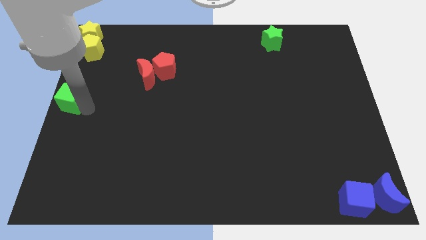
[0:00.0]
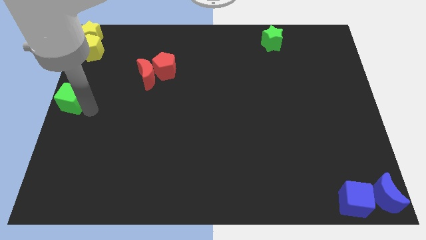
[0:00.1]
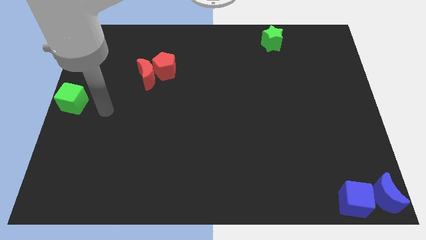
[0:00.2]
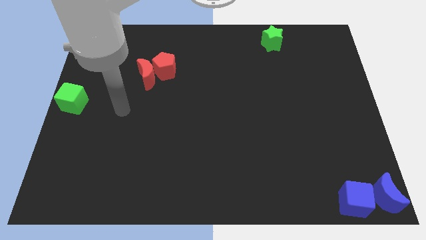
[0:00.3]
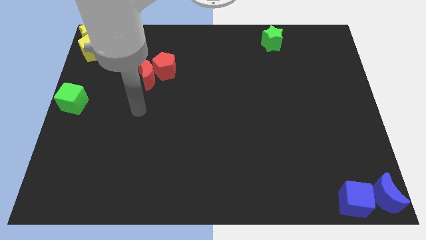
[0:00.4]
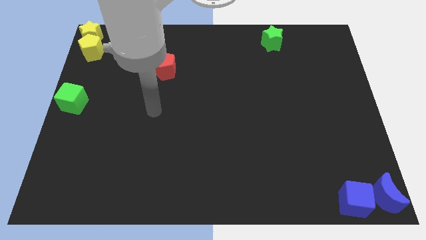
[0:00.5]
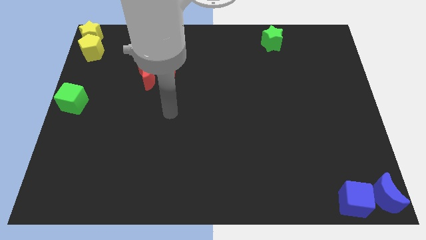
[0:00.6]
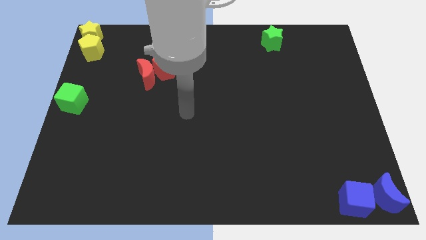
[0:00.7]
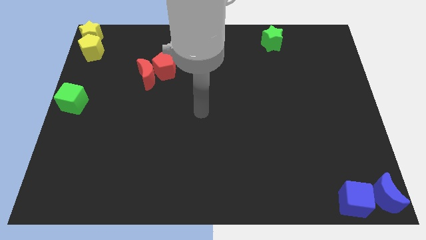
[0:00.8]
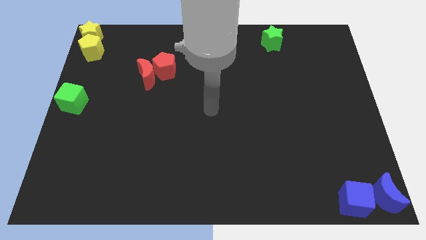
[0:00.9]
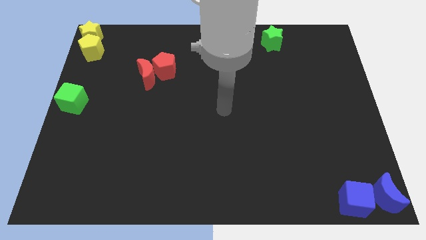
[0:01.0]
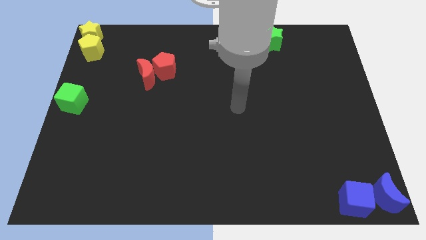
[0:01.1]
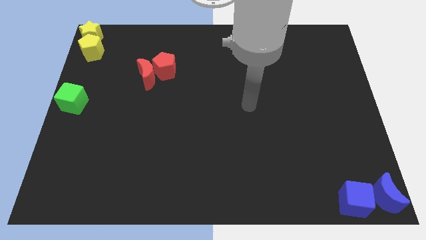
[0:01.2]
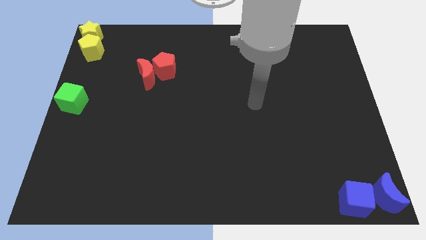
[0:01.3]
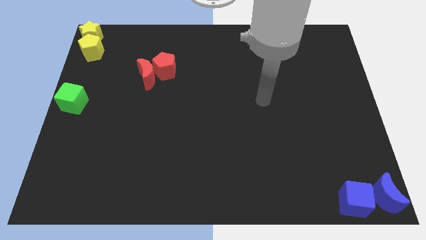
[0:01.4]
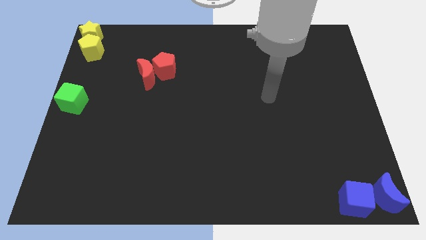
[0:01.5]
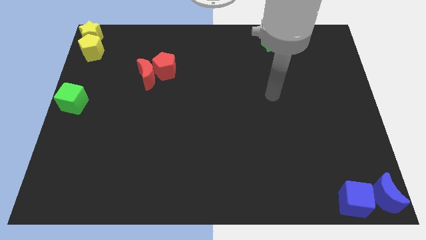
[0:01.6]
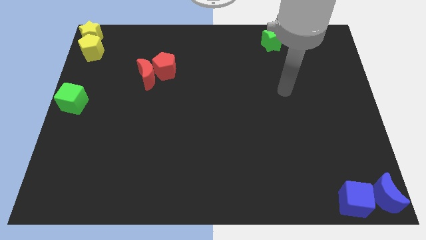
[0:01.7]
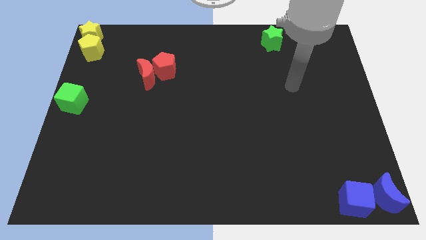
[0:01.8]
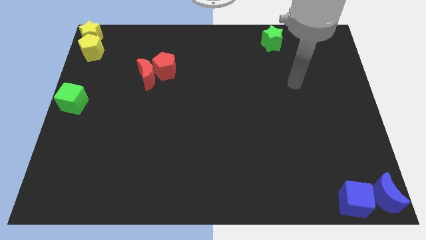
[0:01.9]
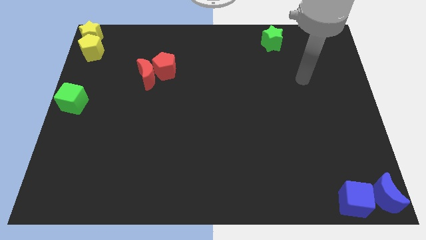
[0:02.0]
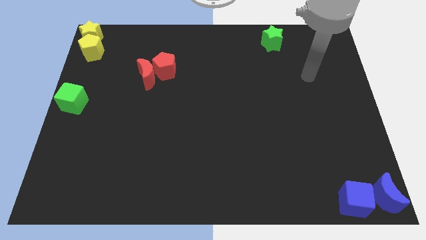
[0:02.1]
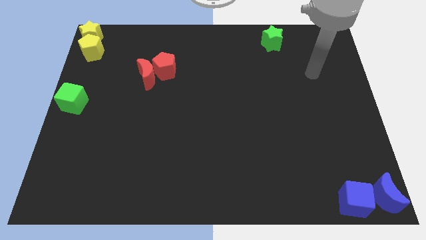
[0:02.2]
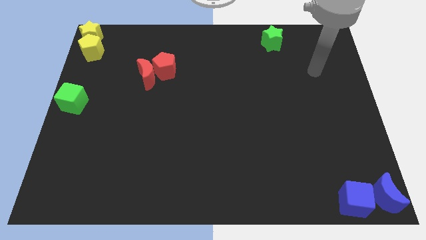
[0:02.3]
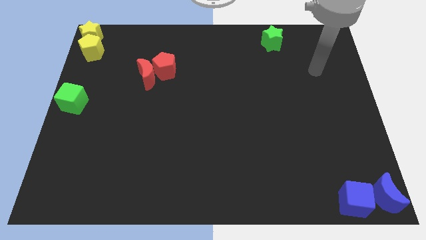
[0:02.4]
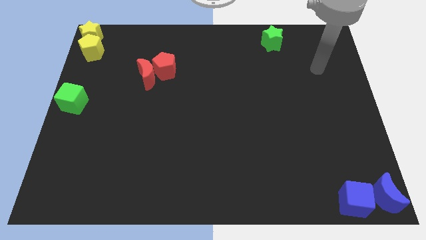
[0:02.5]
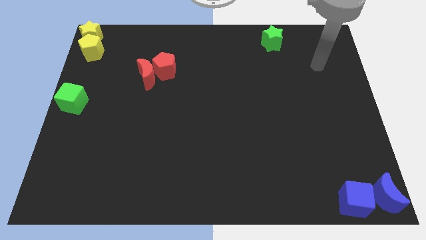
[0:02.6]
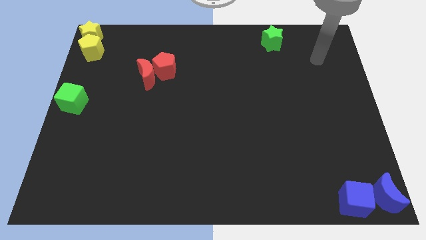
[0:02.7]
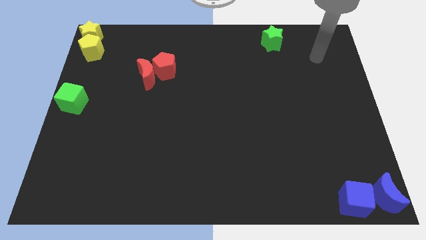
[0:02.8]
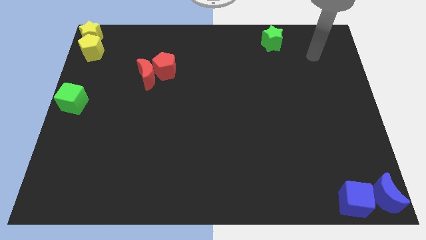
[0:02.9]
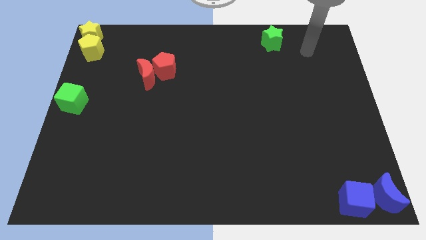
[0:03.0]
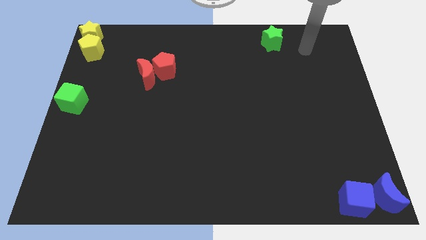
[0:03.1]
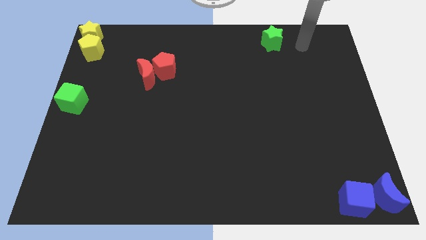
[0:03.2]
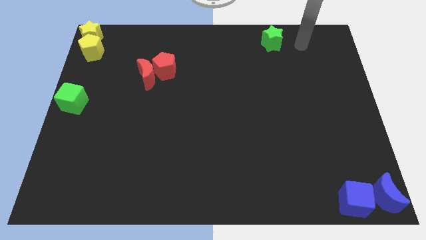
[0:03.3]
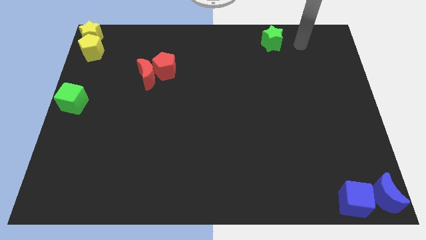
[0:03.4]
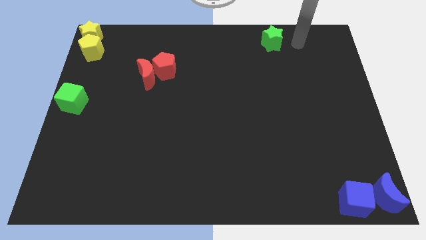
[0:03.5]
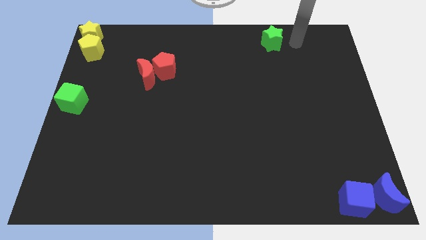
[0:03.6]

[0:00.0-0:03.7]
move the arm right to the green star

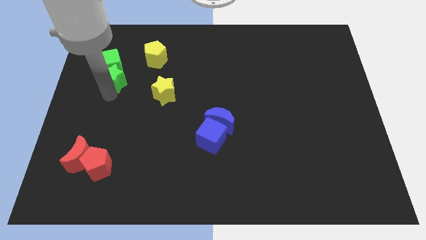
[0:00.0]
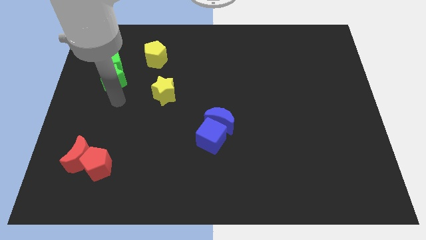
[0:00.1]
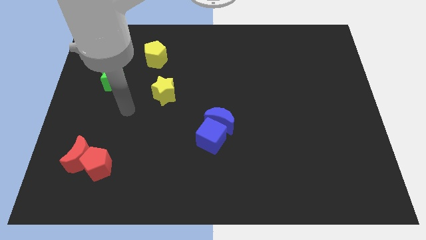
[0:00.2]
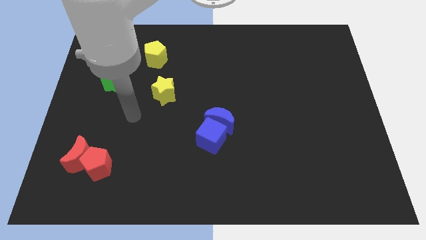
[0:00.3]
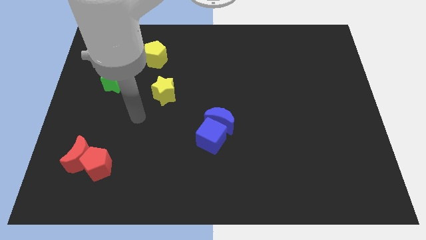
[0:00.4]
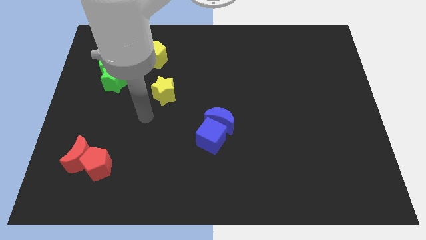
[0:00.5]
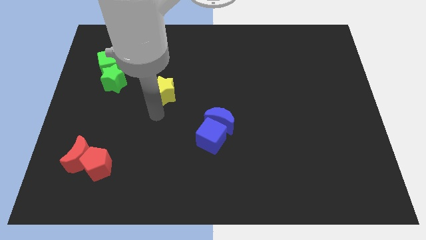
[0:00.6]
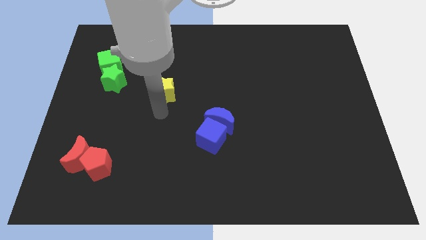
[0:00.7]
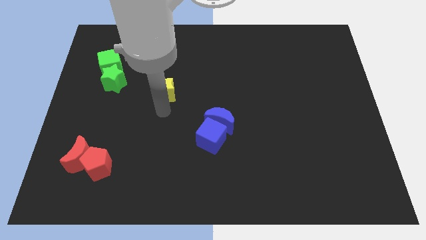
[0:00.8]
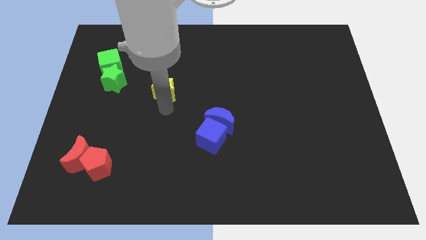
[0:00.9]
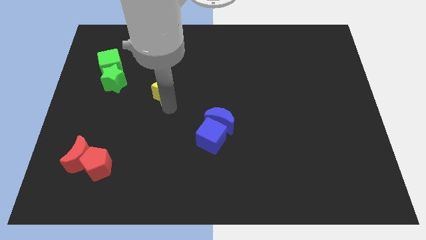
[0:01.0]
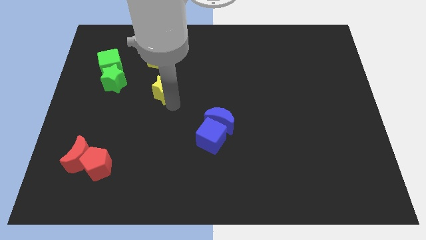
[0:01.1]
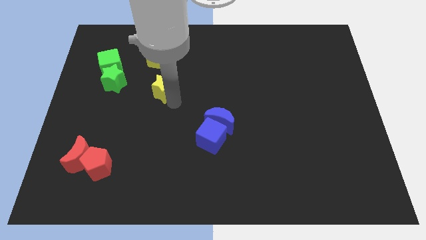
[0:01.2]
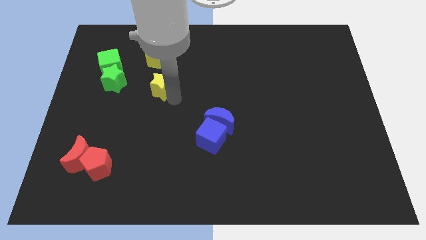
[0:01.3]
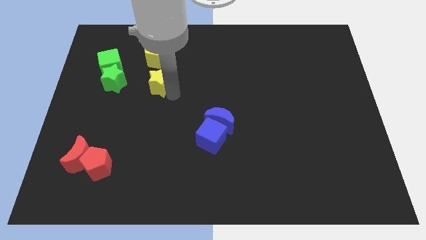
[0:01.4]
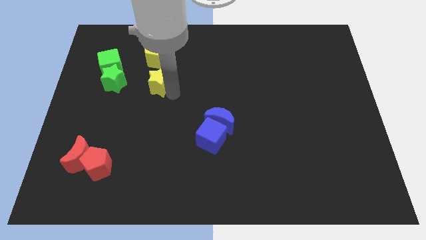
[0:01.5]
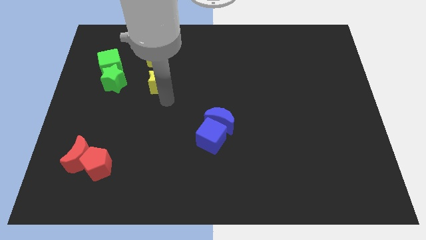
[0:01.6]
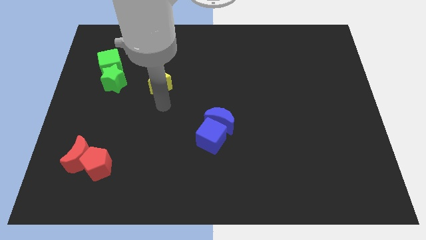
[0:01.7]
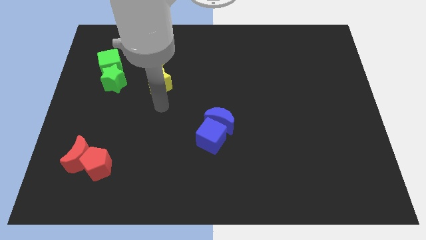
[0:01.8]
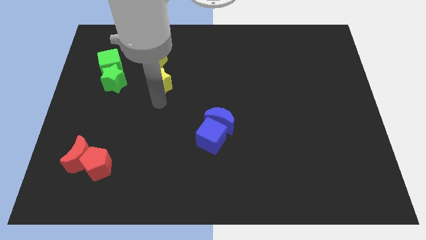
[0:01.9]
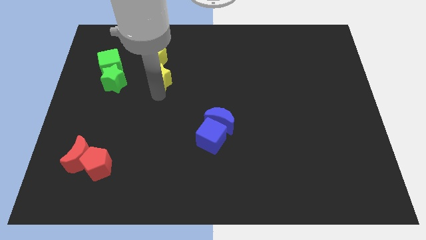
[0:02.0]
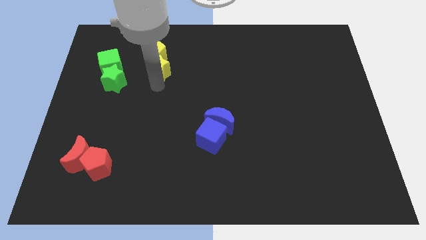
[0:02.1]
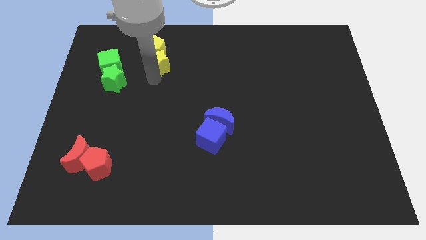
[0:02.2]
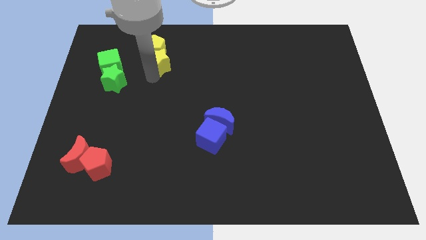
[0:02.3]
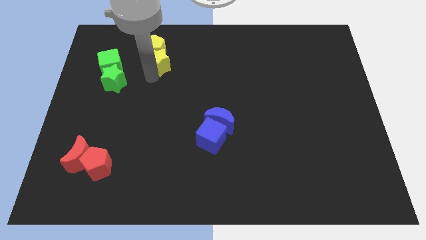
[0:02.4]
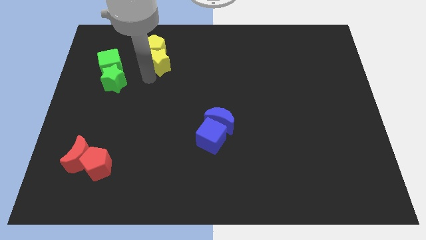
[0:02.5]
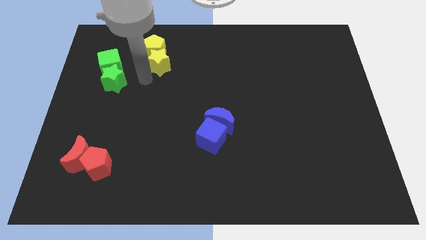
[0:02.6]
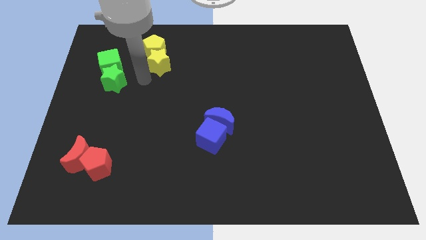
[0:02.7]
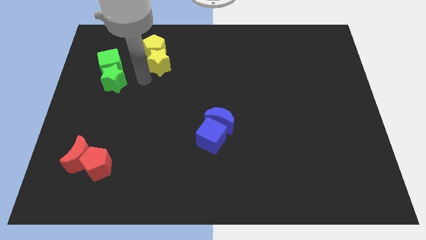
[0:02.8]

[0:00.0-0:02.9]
put yellow star and yellow pentagon together

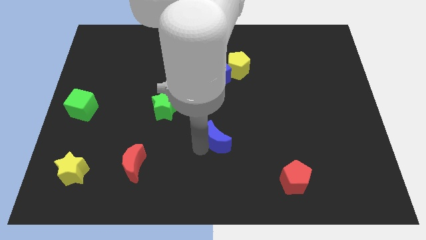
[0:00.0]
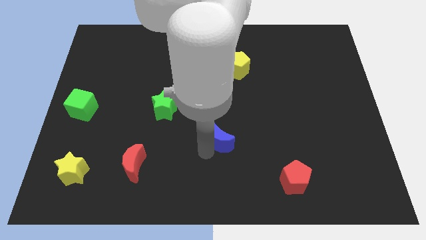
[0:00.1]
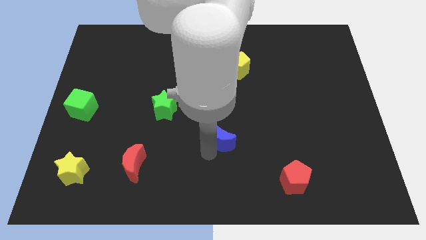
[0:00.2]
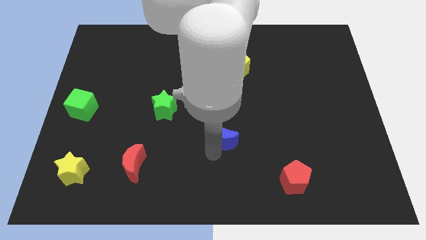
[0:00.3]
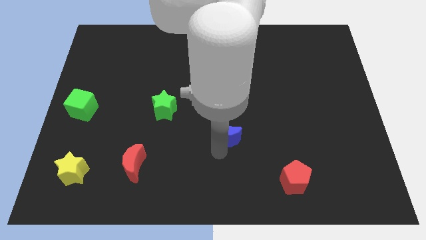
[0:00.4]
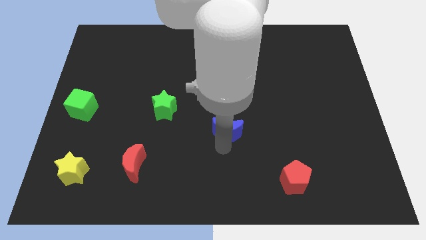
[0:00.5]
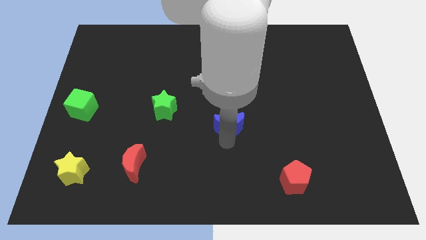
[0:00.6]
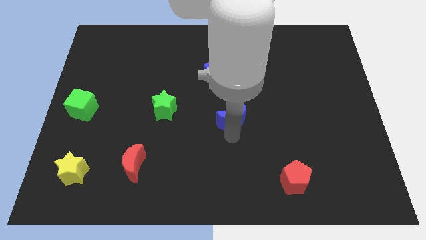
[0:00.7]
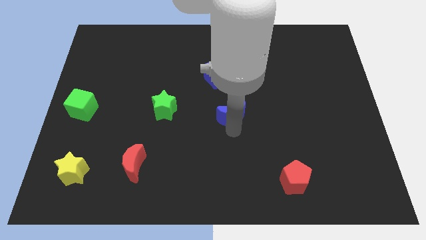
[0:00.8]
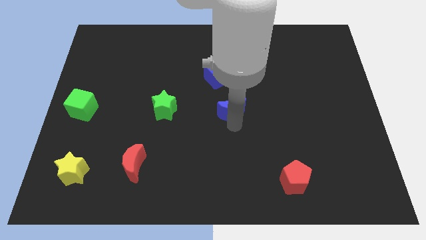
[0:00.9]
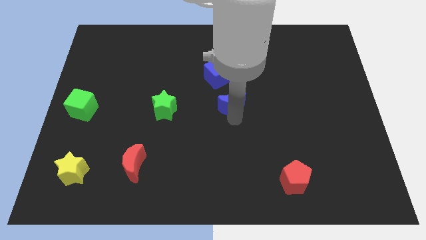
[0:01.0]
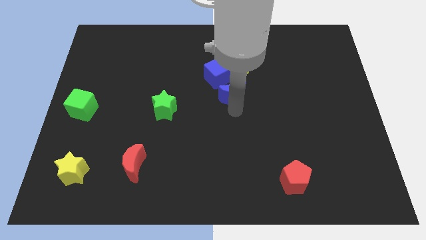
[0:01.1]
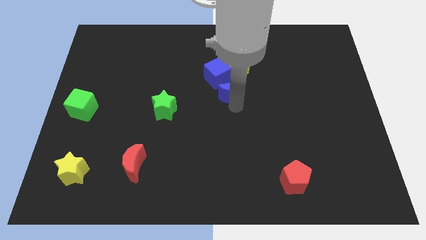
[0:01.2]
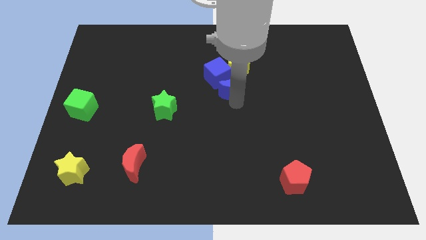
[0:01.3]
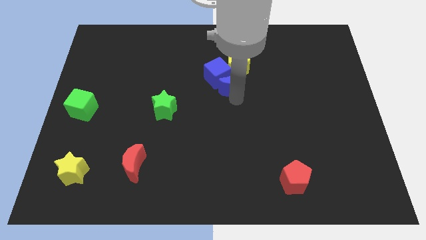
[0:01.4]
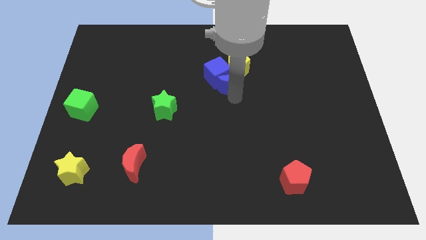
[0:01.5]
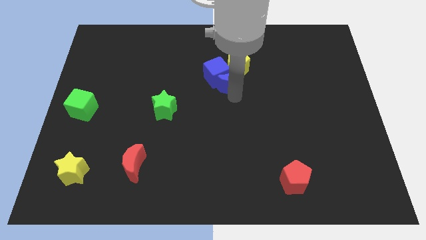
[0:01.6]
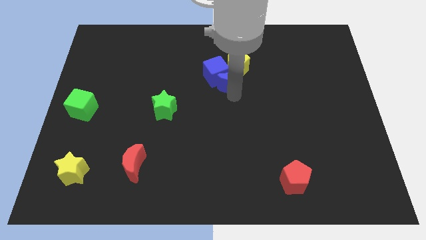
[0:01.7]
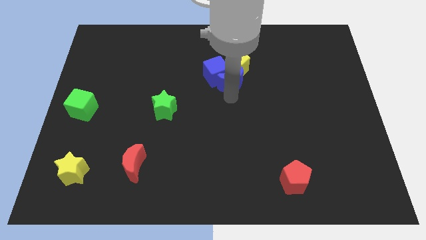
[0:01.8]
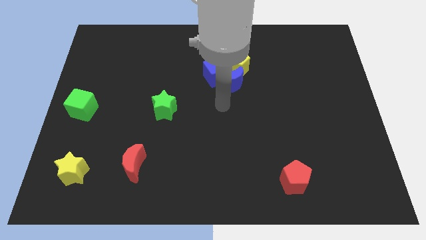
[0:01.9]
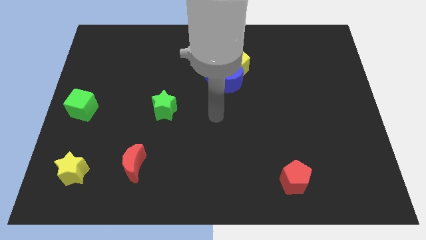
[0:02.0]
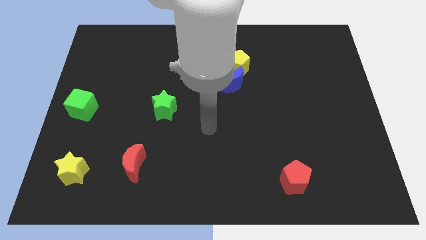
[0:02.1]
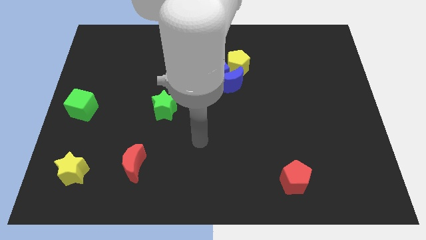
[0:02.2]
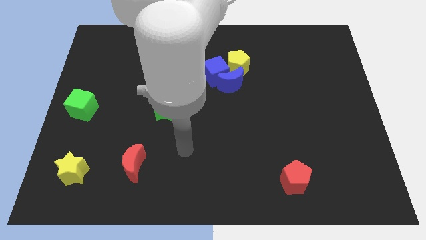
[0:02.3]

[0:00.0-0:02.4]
place the blue crescent below the blue cube
